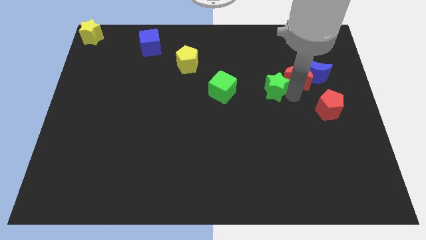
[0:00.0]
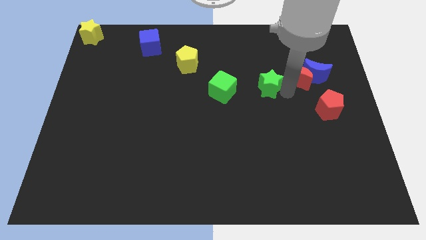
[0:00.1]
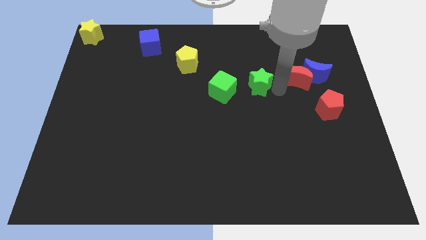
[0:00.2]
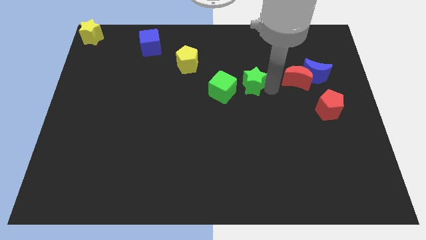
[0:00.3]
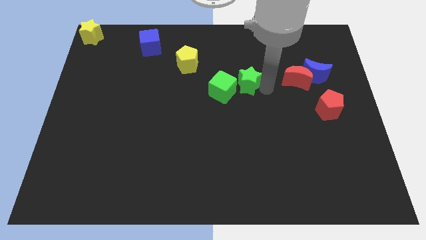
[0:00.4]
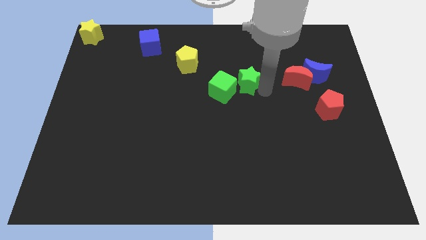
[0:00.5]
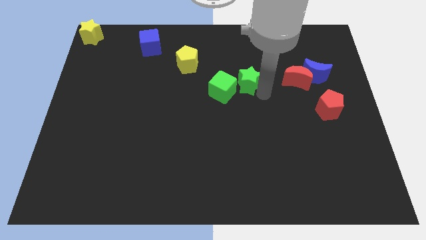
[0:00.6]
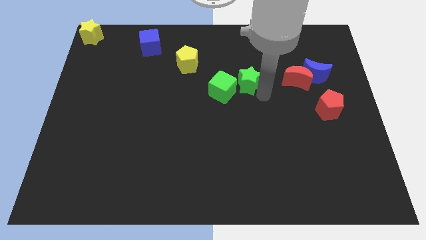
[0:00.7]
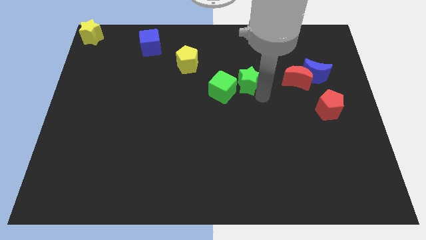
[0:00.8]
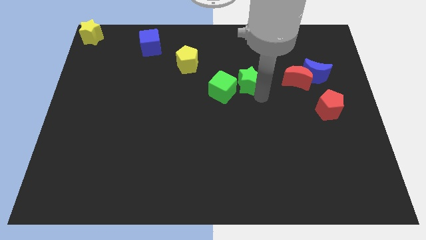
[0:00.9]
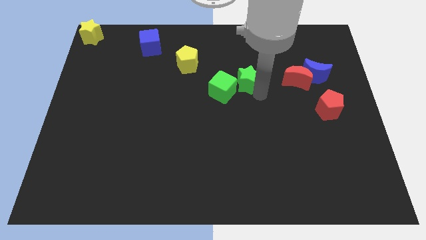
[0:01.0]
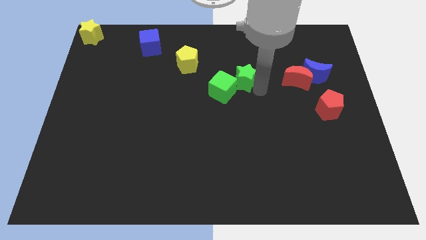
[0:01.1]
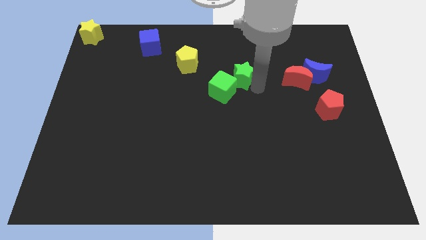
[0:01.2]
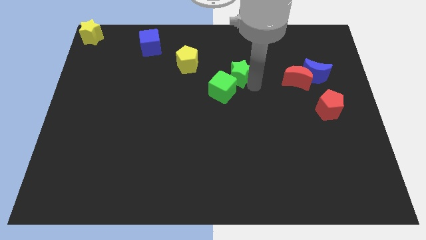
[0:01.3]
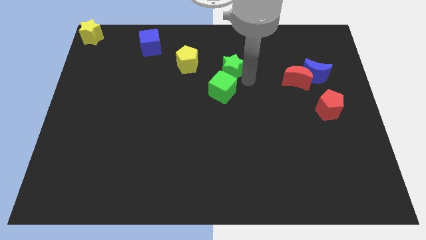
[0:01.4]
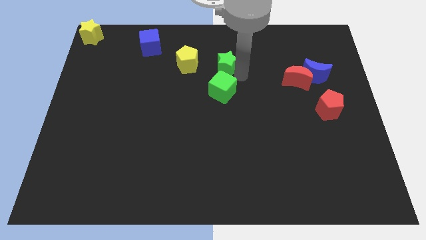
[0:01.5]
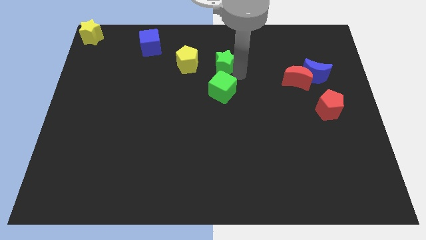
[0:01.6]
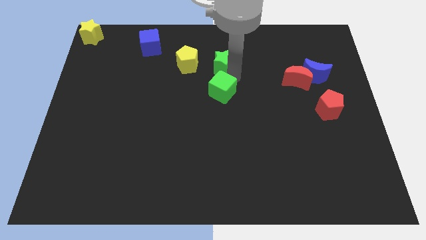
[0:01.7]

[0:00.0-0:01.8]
push the green star to the top of the green cube

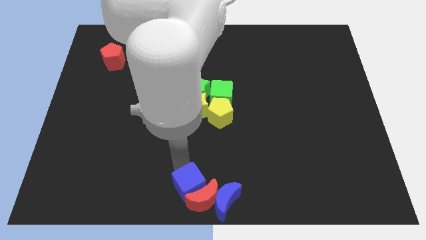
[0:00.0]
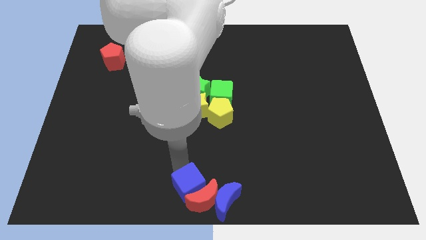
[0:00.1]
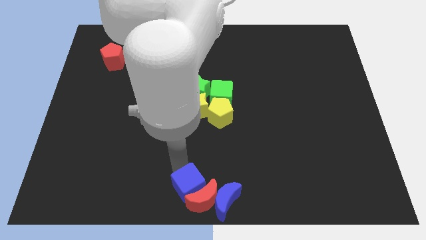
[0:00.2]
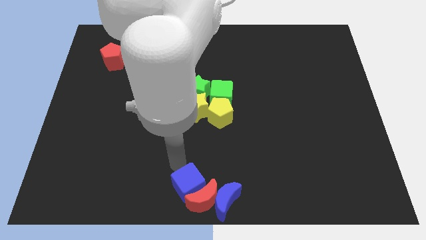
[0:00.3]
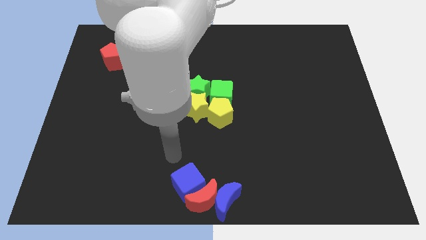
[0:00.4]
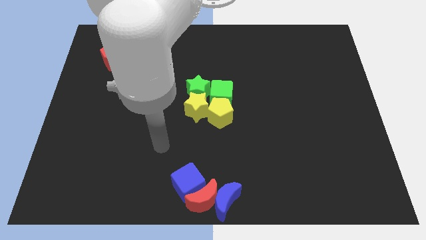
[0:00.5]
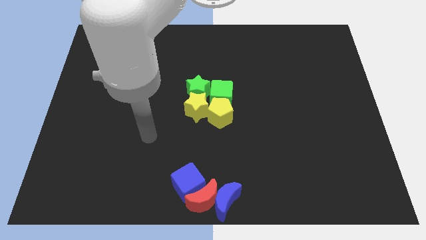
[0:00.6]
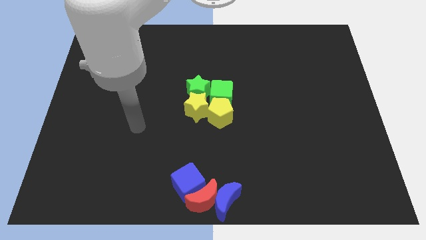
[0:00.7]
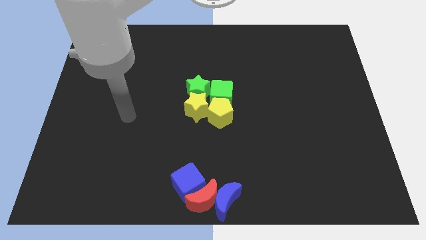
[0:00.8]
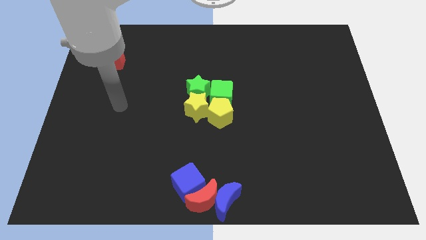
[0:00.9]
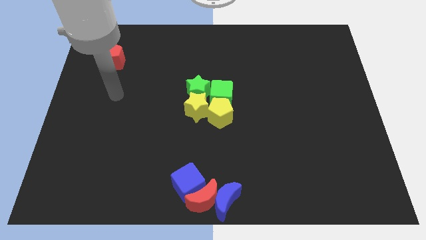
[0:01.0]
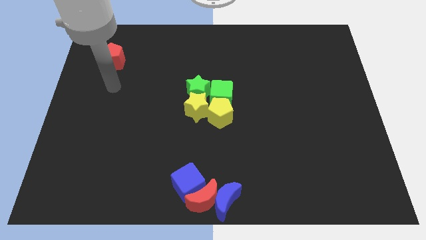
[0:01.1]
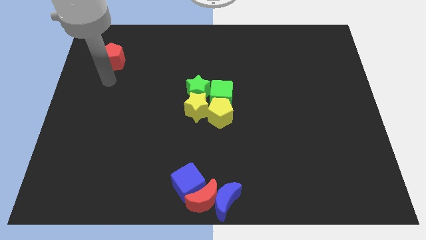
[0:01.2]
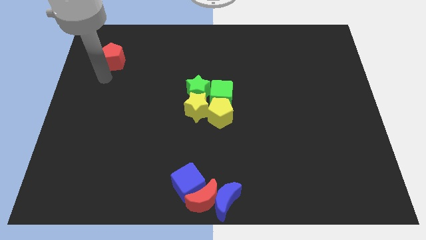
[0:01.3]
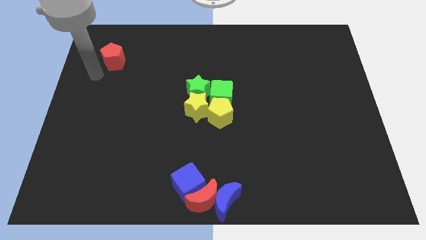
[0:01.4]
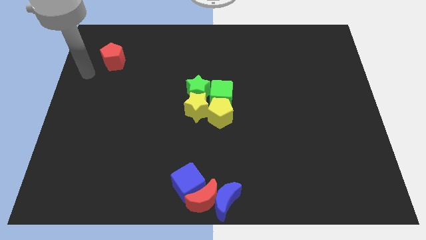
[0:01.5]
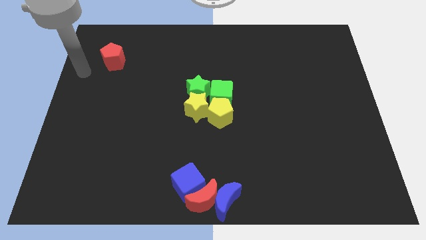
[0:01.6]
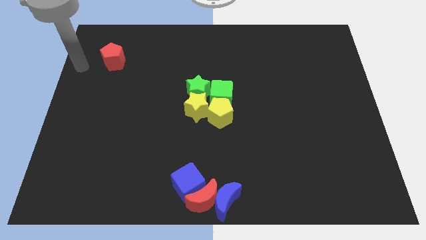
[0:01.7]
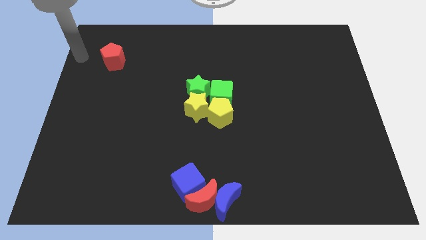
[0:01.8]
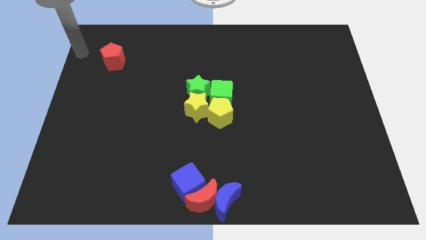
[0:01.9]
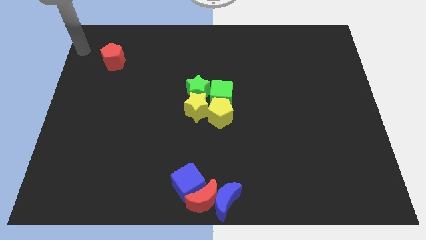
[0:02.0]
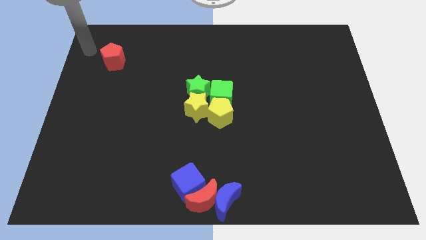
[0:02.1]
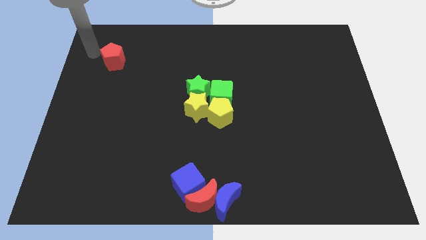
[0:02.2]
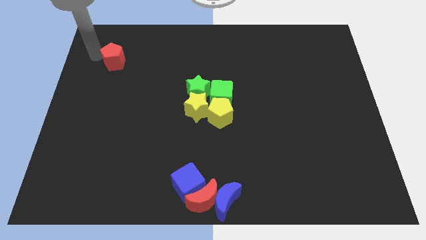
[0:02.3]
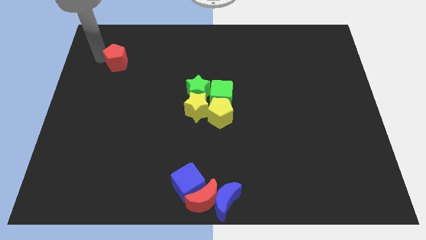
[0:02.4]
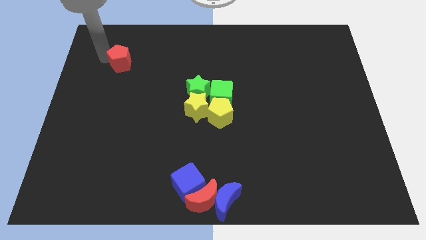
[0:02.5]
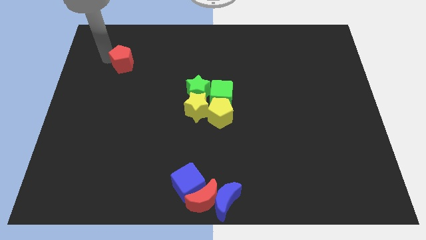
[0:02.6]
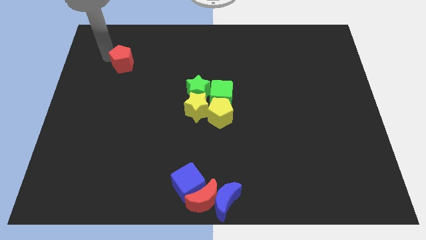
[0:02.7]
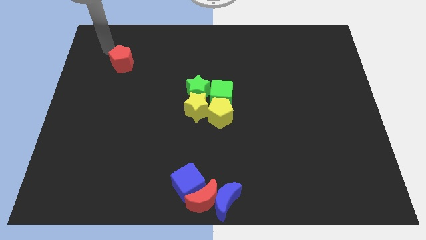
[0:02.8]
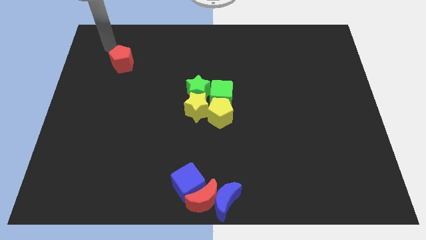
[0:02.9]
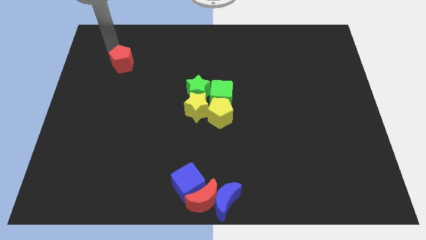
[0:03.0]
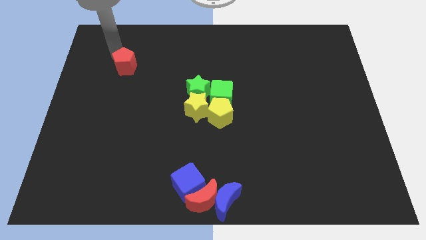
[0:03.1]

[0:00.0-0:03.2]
move your arm from the blue cube to red pentagon

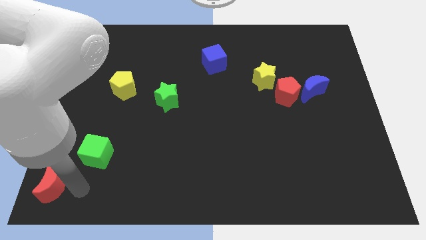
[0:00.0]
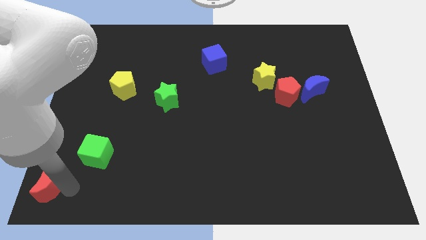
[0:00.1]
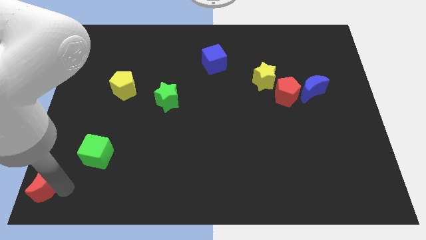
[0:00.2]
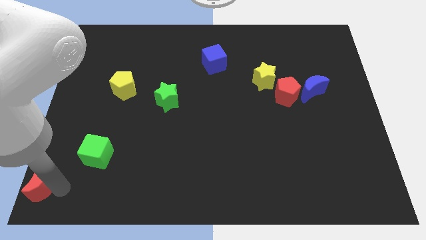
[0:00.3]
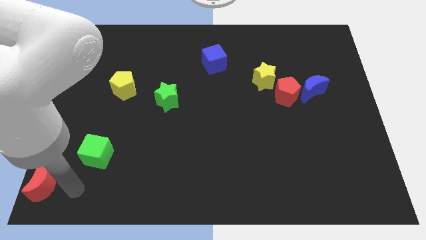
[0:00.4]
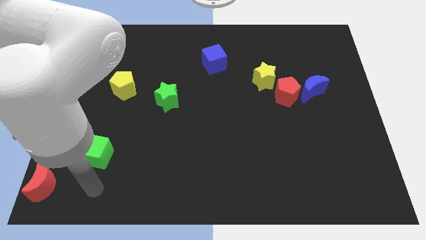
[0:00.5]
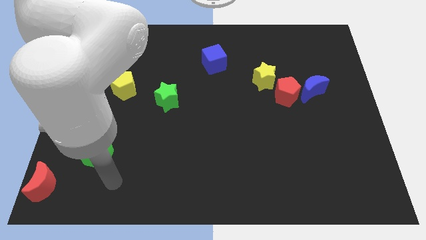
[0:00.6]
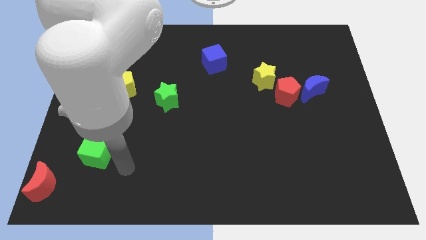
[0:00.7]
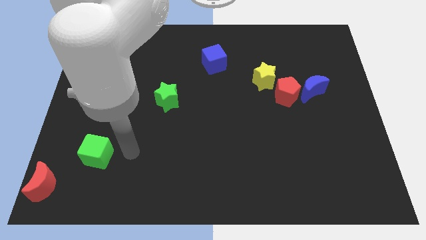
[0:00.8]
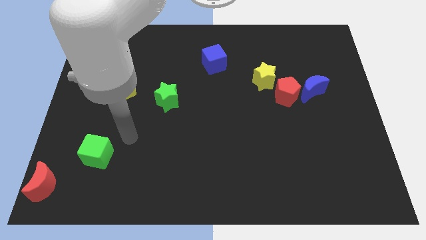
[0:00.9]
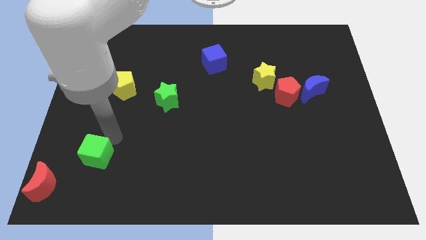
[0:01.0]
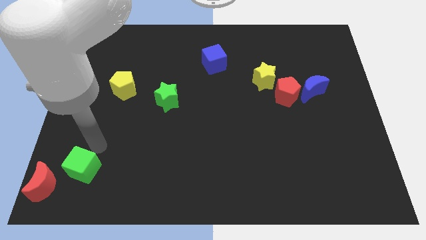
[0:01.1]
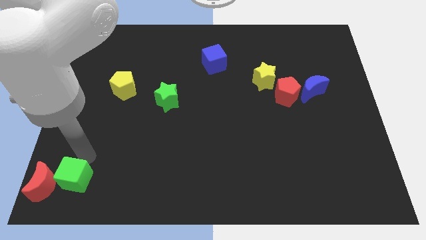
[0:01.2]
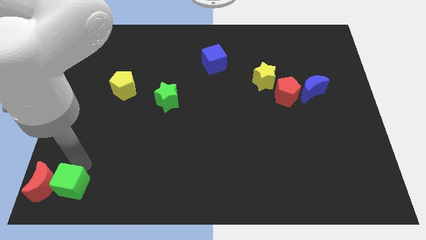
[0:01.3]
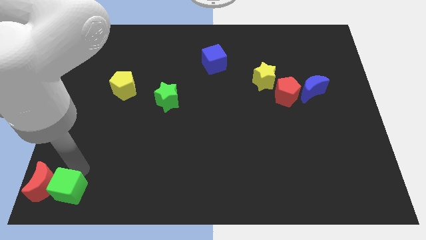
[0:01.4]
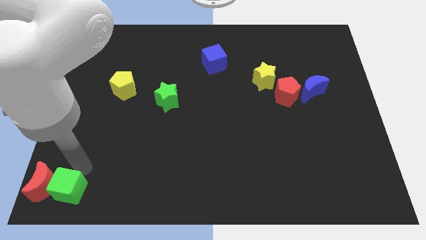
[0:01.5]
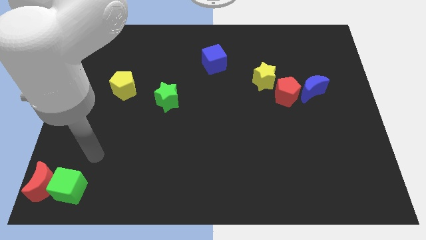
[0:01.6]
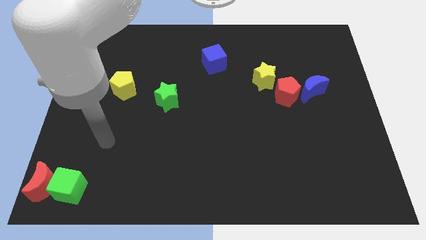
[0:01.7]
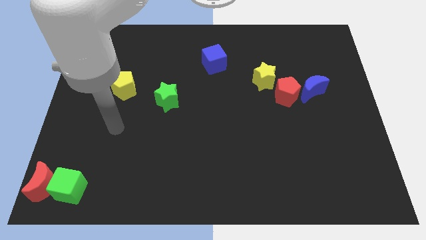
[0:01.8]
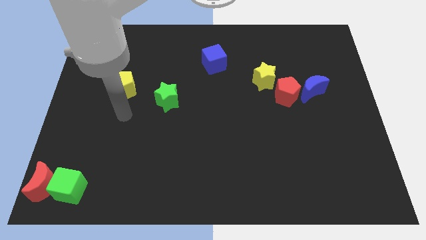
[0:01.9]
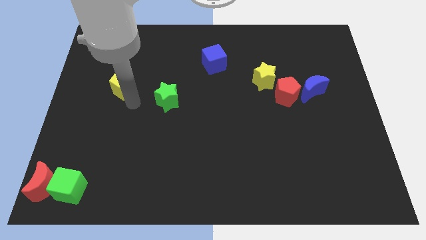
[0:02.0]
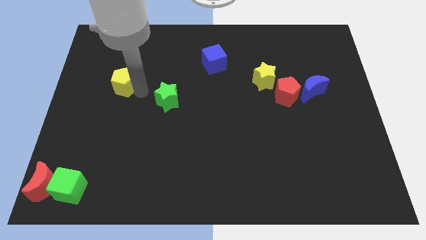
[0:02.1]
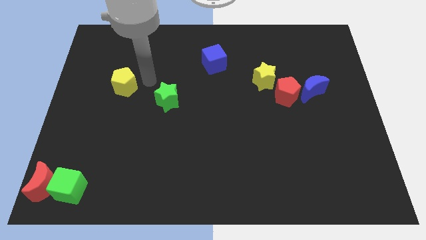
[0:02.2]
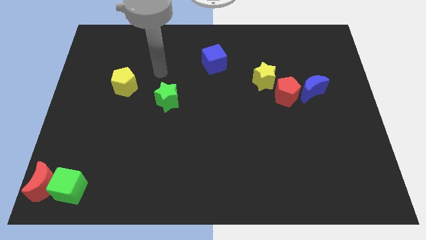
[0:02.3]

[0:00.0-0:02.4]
place the green cube right to the red moon

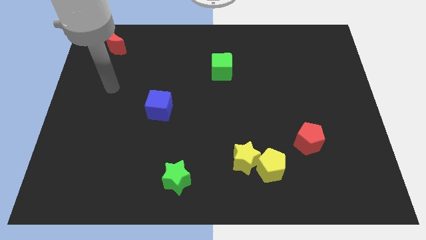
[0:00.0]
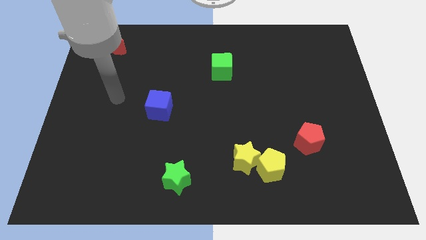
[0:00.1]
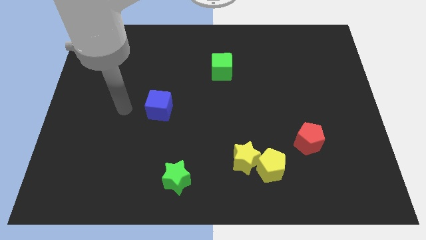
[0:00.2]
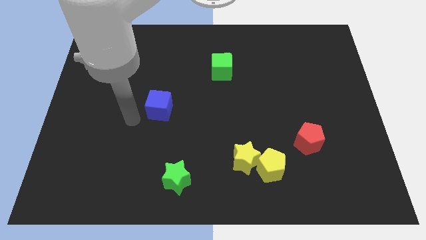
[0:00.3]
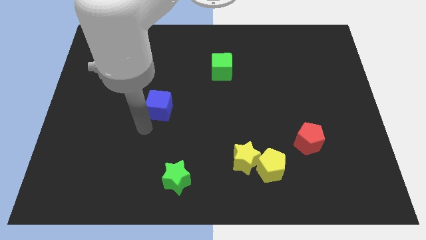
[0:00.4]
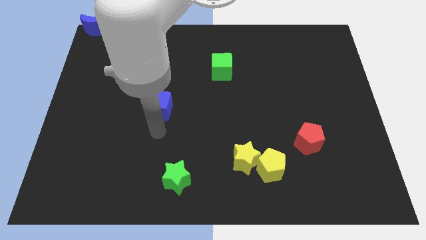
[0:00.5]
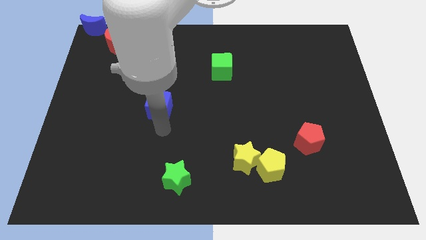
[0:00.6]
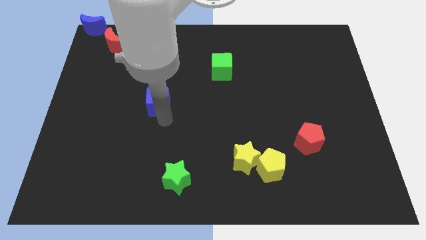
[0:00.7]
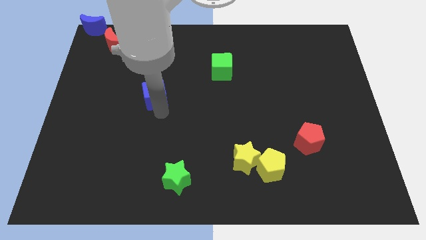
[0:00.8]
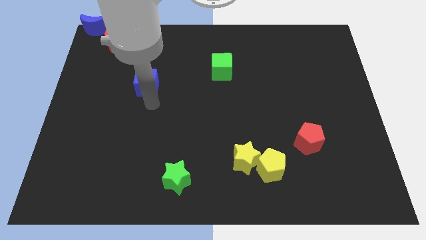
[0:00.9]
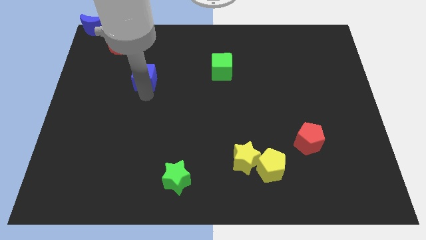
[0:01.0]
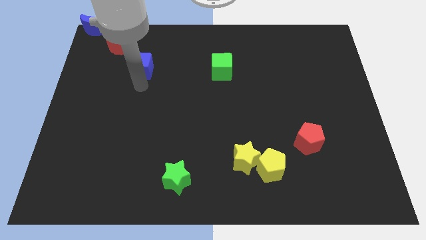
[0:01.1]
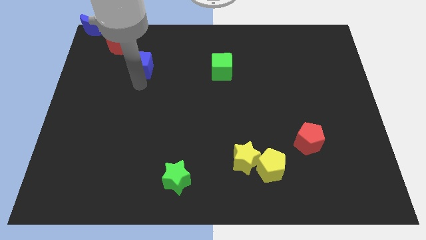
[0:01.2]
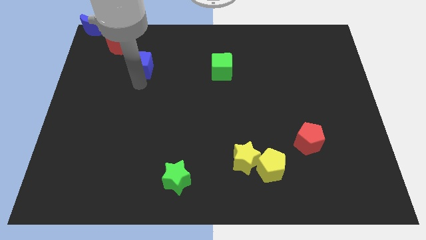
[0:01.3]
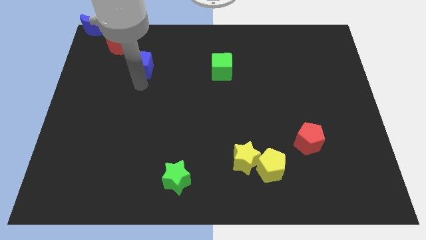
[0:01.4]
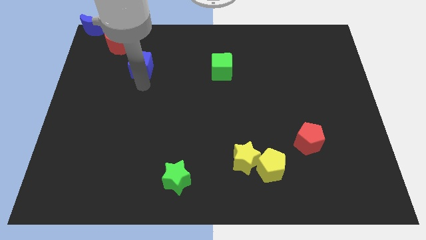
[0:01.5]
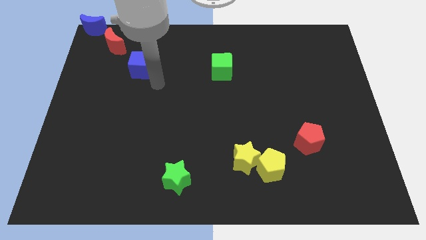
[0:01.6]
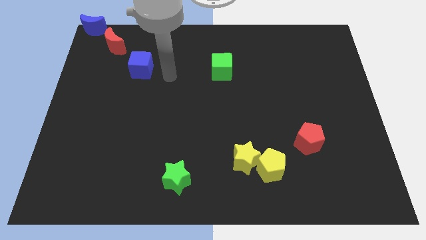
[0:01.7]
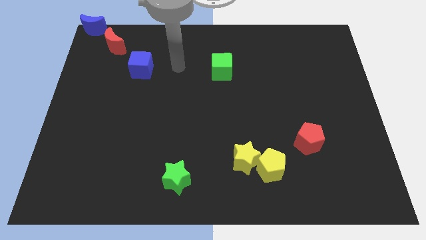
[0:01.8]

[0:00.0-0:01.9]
move the blue cube to the bottom right side of the red crescent
